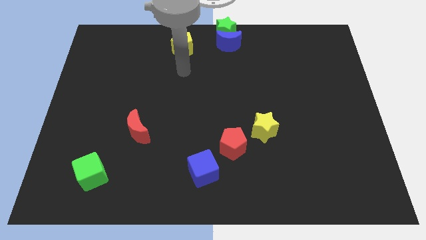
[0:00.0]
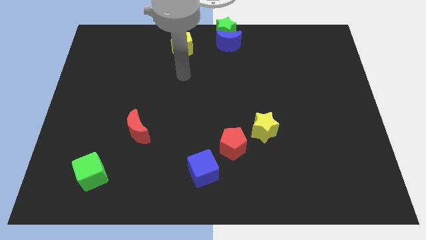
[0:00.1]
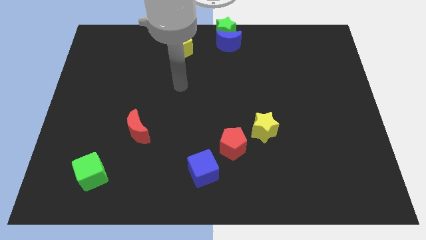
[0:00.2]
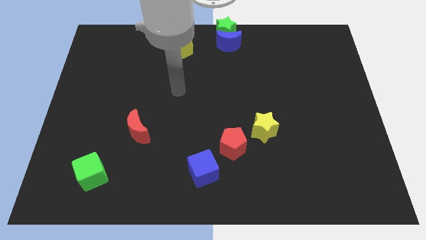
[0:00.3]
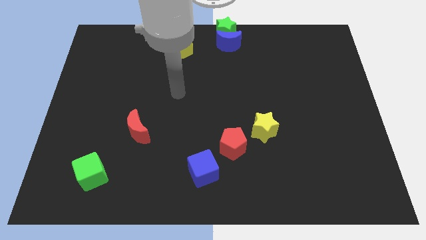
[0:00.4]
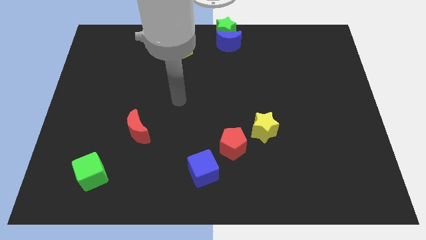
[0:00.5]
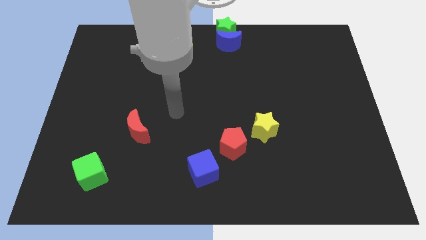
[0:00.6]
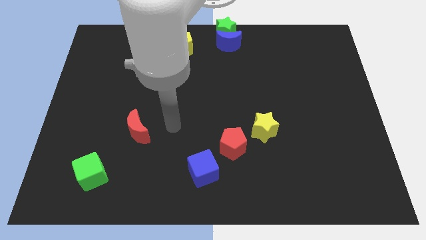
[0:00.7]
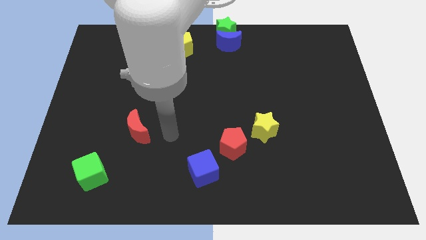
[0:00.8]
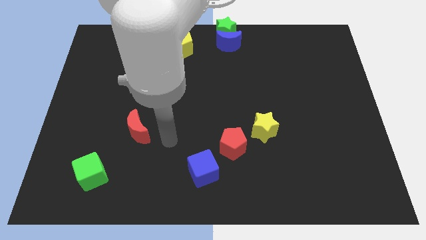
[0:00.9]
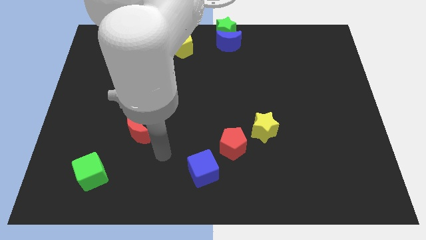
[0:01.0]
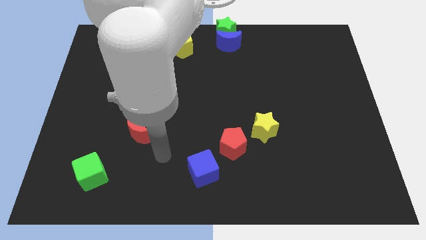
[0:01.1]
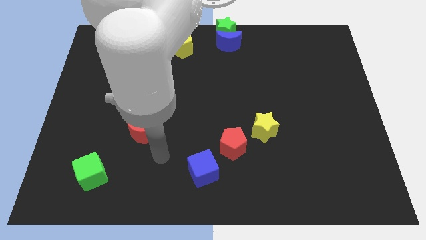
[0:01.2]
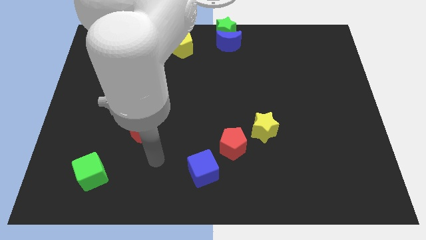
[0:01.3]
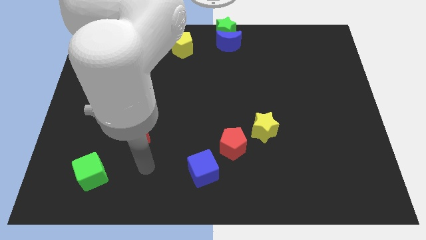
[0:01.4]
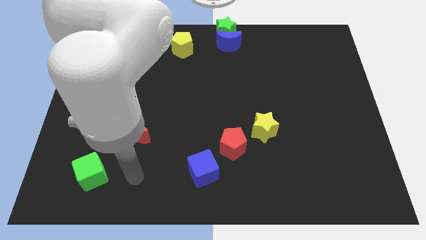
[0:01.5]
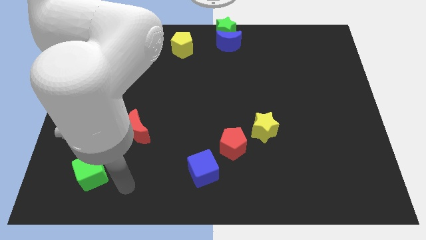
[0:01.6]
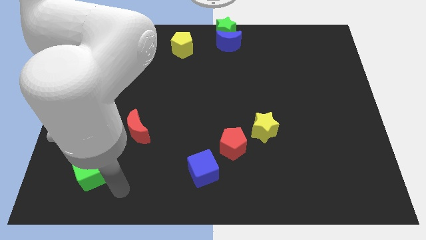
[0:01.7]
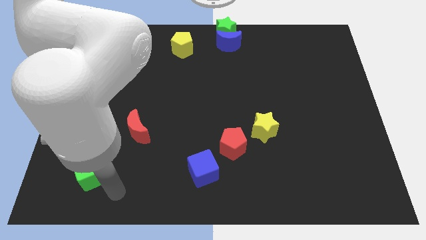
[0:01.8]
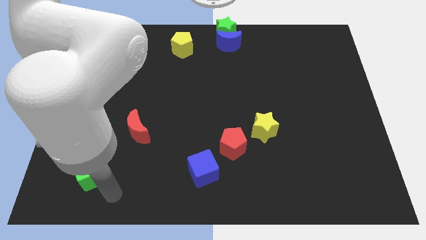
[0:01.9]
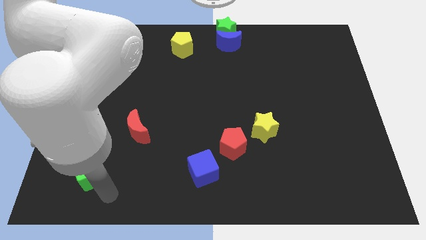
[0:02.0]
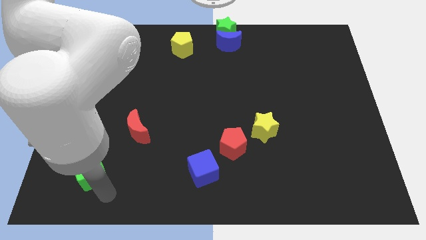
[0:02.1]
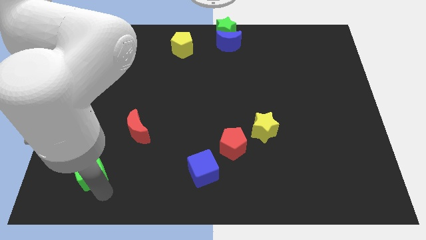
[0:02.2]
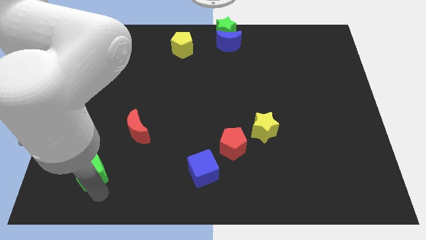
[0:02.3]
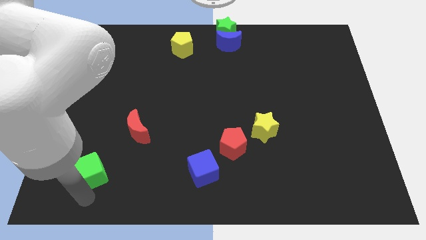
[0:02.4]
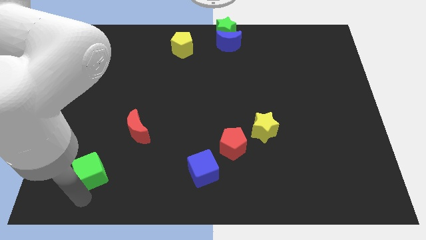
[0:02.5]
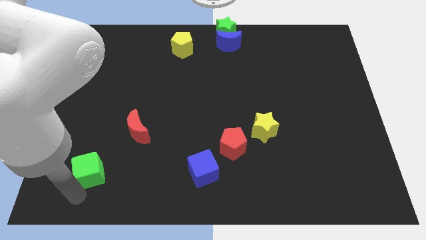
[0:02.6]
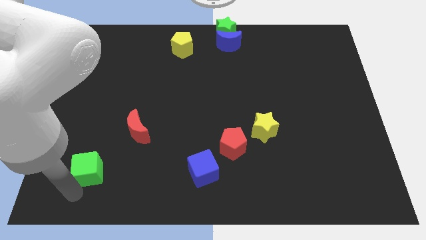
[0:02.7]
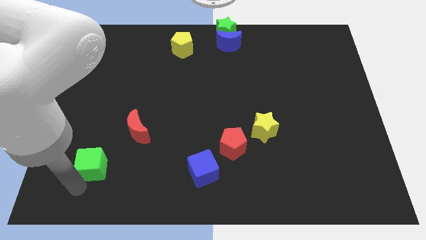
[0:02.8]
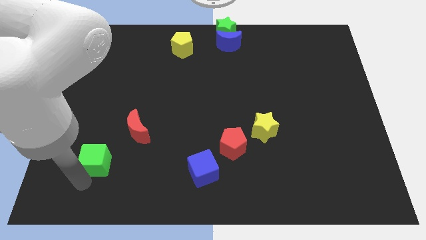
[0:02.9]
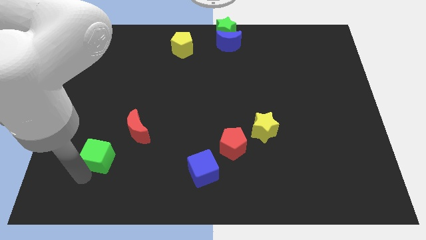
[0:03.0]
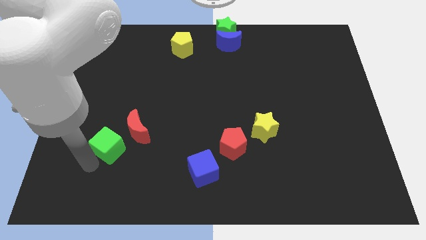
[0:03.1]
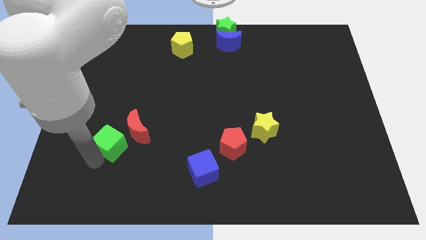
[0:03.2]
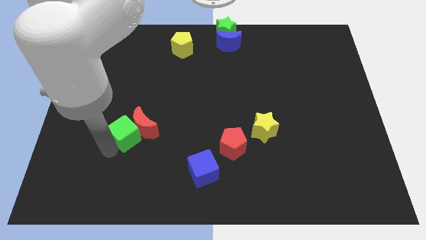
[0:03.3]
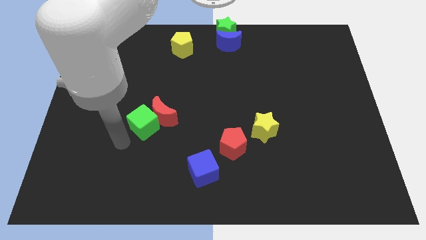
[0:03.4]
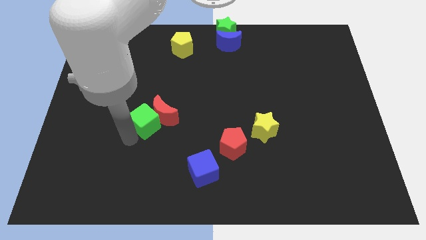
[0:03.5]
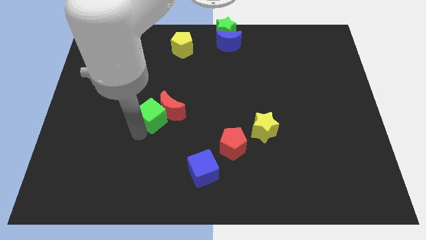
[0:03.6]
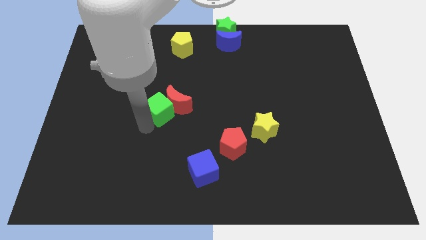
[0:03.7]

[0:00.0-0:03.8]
push the green cube into the red crescent

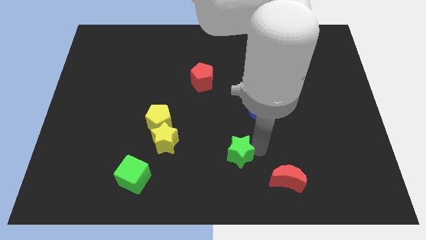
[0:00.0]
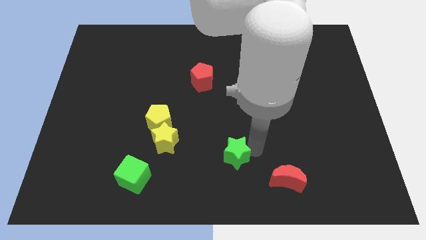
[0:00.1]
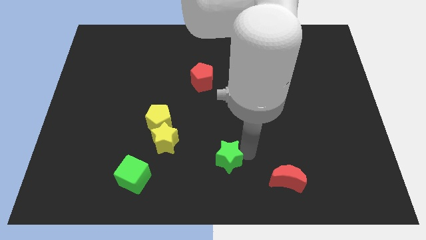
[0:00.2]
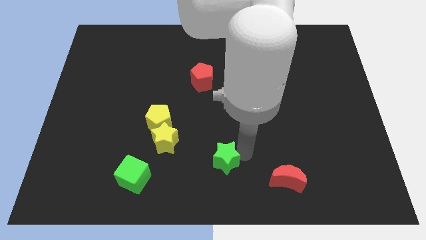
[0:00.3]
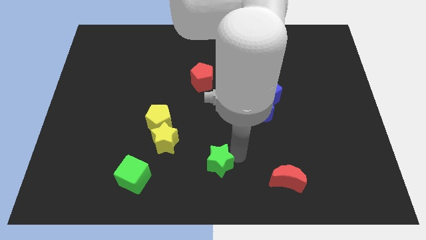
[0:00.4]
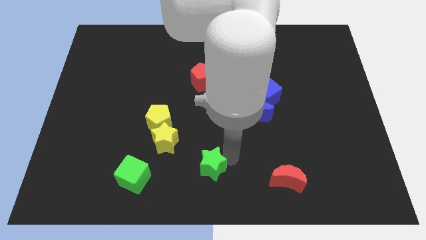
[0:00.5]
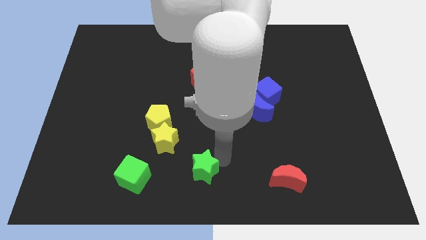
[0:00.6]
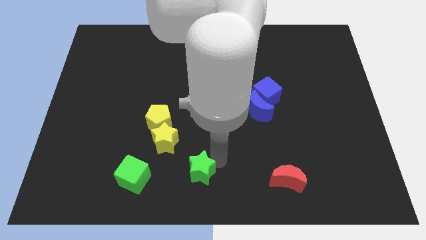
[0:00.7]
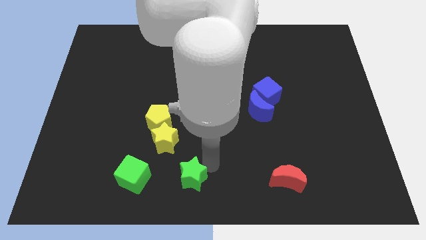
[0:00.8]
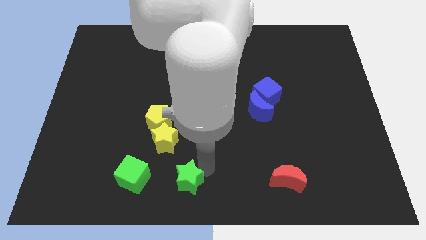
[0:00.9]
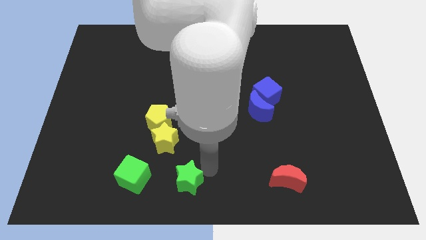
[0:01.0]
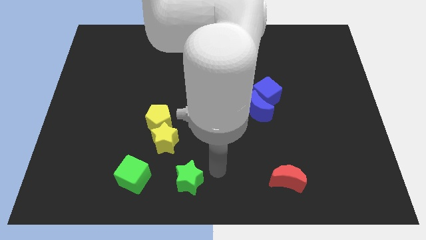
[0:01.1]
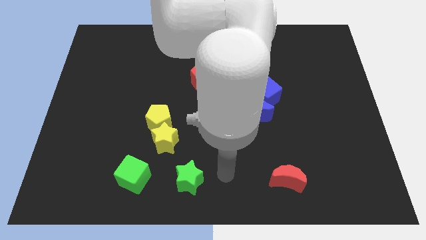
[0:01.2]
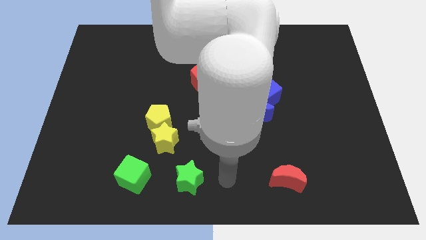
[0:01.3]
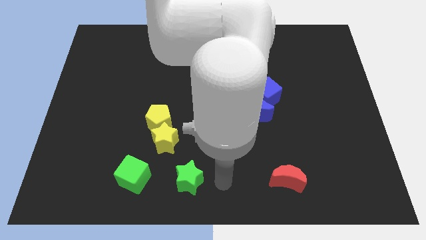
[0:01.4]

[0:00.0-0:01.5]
push the green star to the bottom center

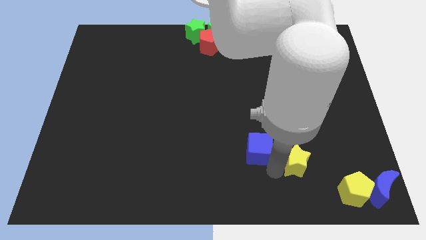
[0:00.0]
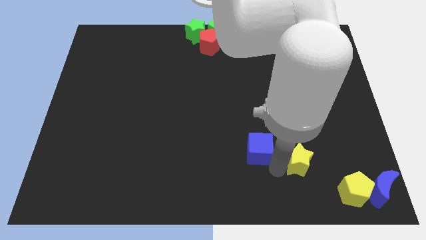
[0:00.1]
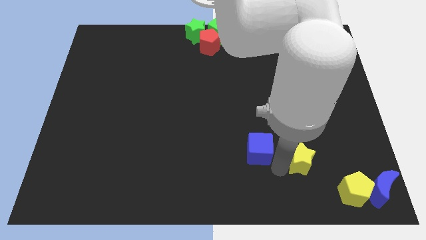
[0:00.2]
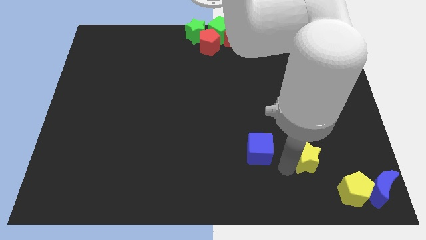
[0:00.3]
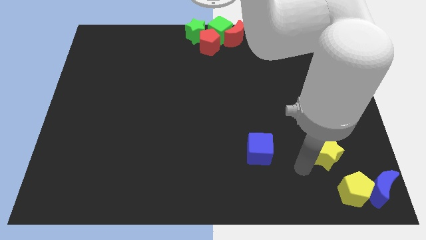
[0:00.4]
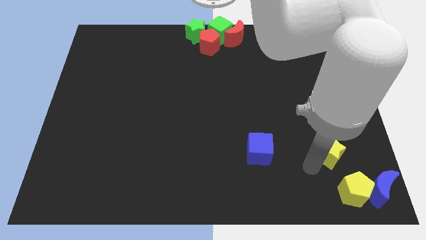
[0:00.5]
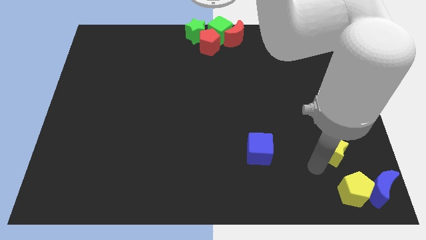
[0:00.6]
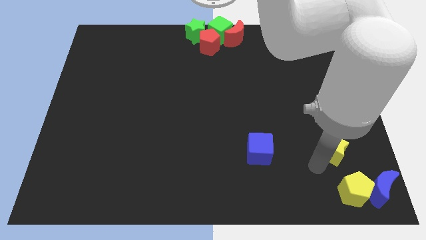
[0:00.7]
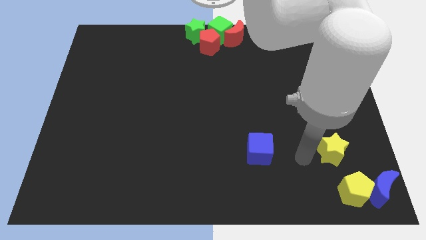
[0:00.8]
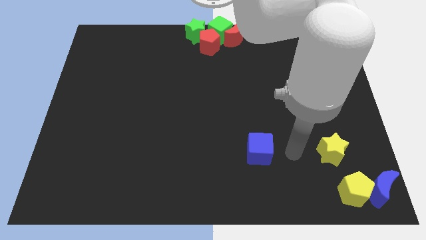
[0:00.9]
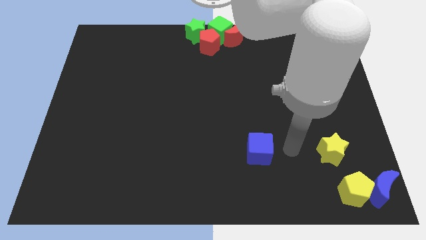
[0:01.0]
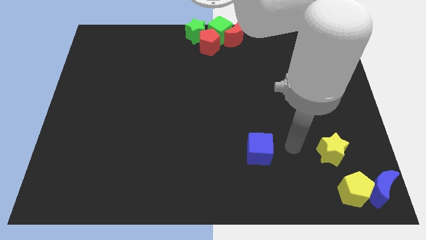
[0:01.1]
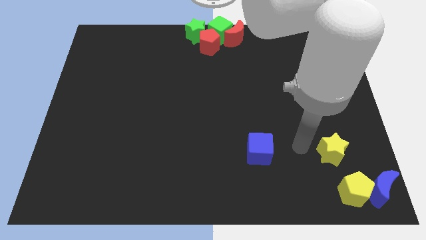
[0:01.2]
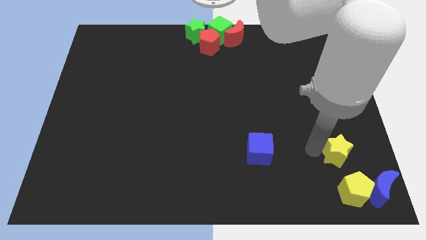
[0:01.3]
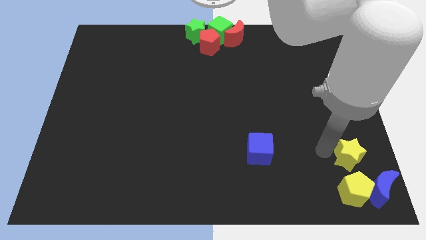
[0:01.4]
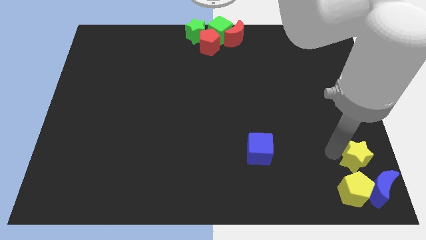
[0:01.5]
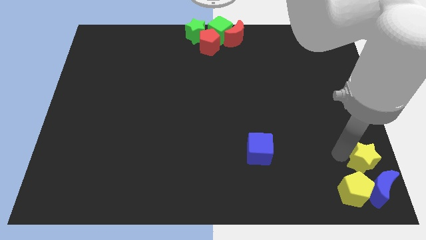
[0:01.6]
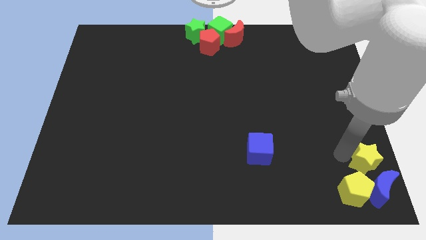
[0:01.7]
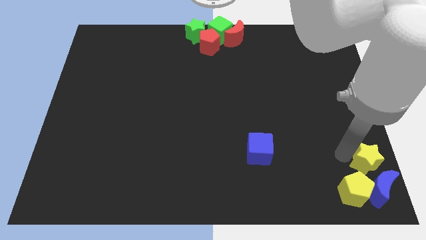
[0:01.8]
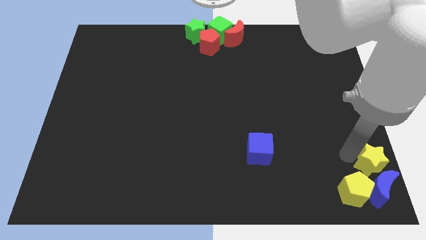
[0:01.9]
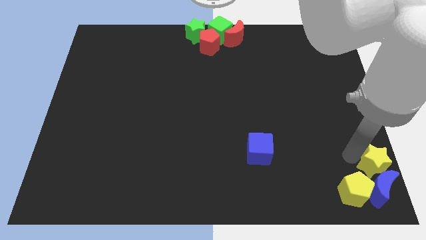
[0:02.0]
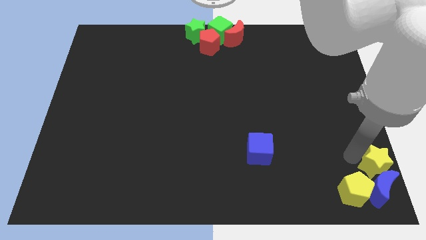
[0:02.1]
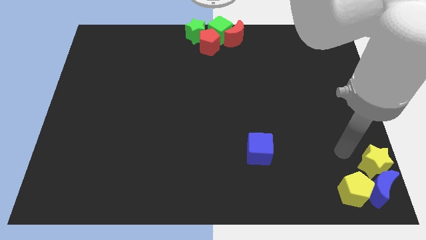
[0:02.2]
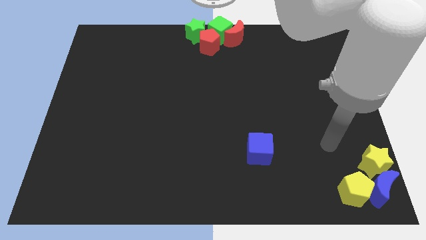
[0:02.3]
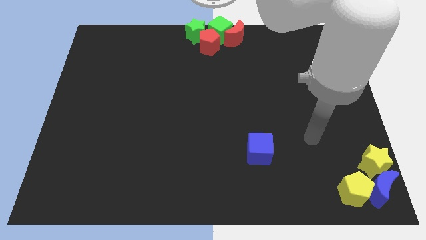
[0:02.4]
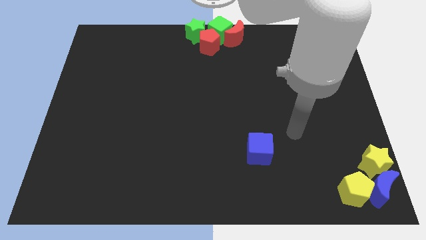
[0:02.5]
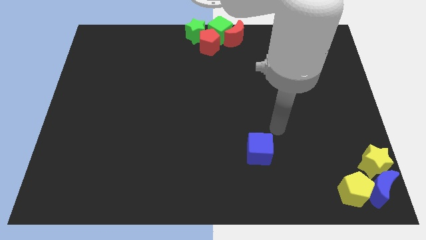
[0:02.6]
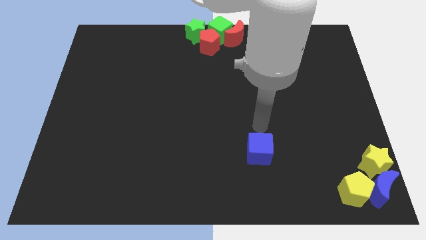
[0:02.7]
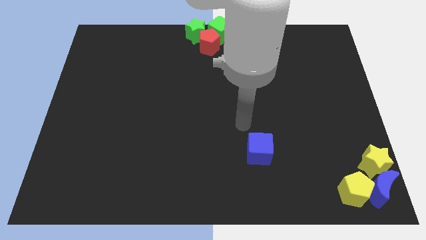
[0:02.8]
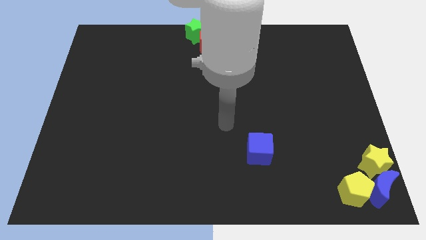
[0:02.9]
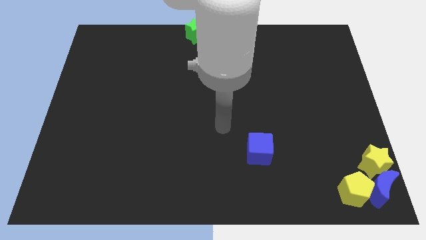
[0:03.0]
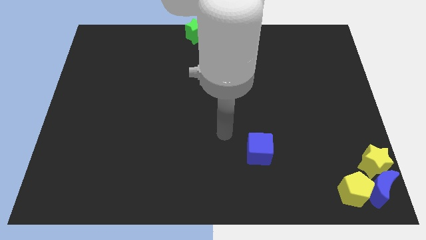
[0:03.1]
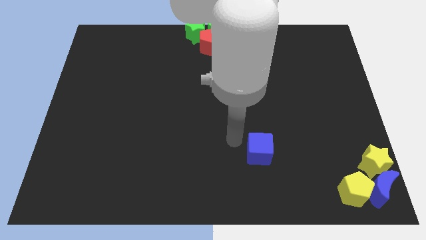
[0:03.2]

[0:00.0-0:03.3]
place the yellow star above the blue moon

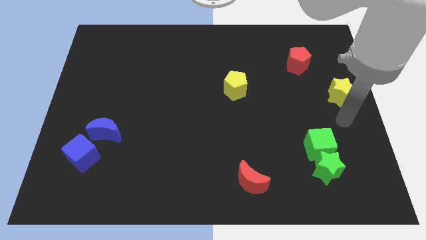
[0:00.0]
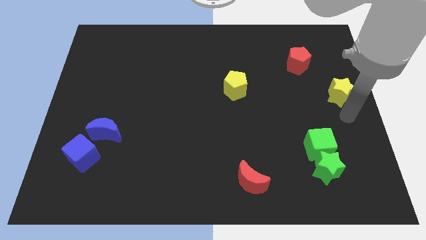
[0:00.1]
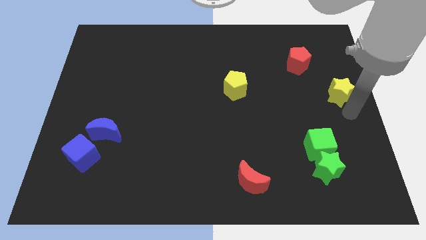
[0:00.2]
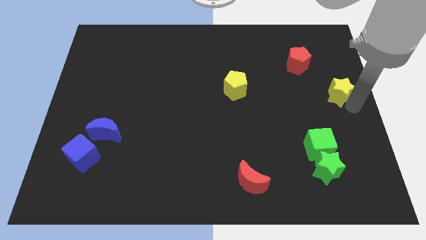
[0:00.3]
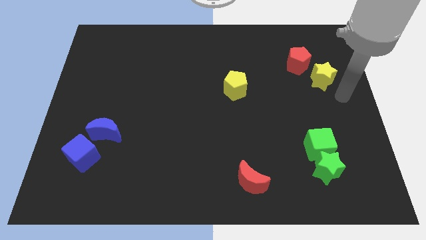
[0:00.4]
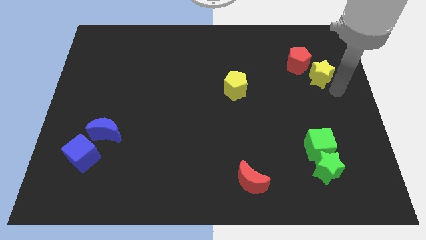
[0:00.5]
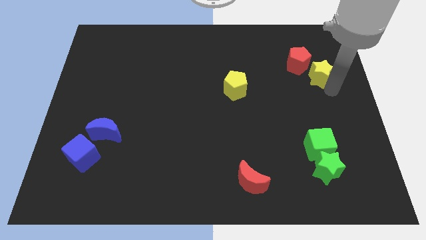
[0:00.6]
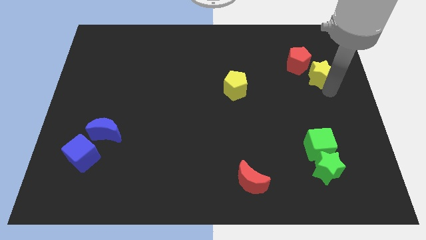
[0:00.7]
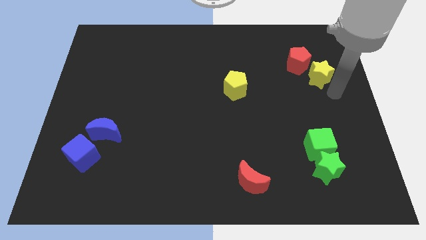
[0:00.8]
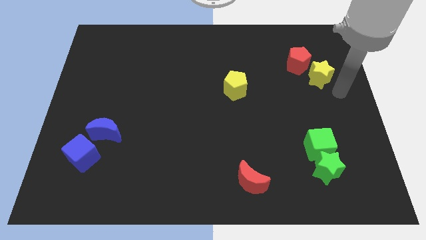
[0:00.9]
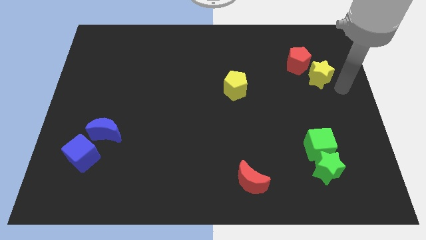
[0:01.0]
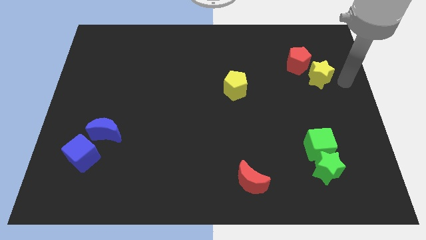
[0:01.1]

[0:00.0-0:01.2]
move yellow star close to red pentagon
